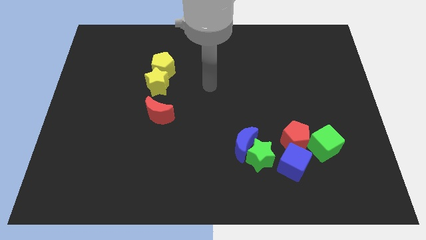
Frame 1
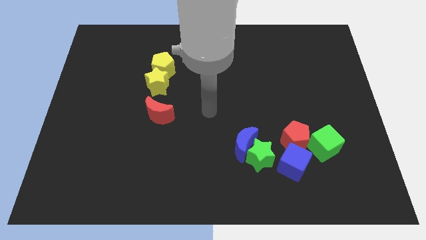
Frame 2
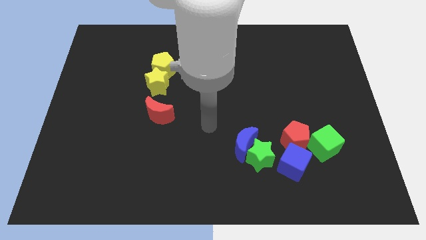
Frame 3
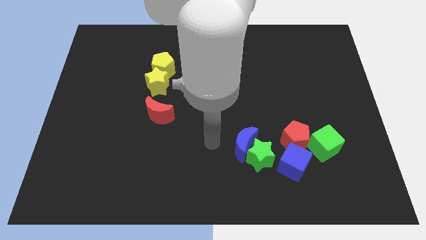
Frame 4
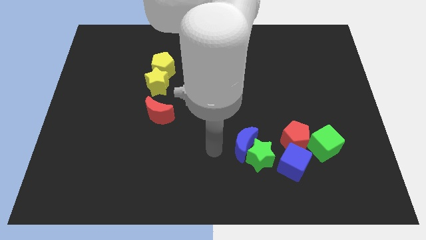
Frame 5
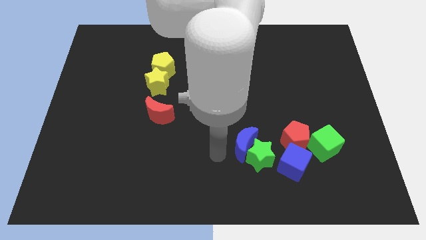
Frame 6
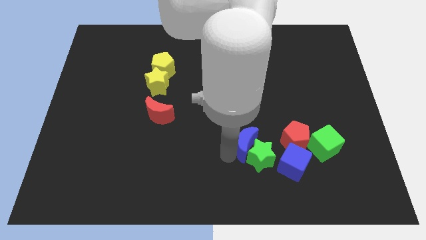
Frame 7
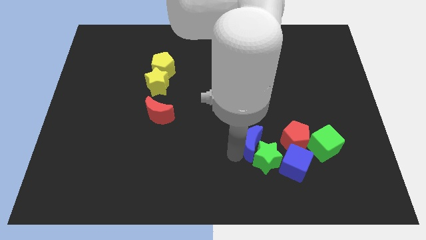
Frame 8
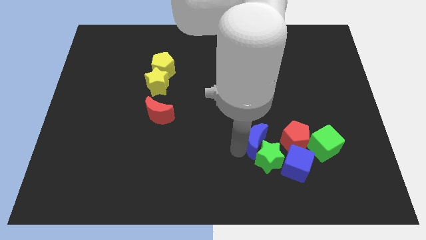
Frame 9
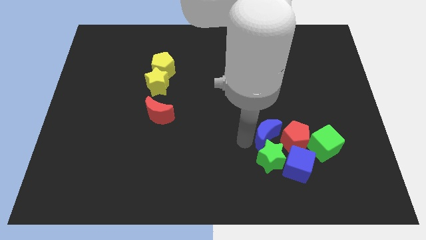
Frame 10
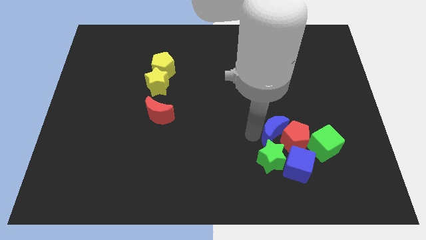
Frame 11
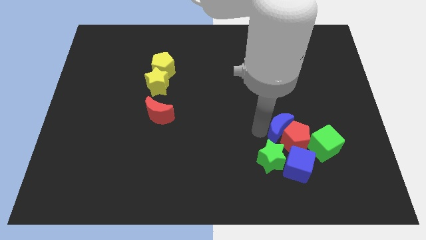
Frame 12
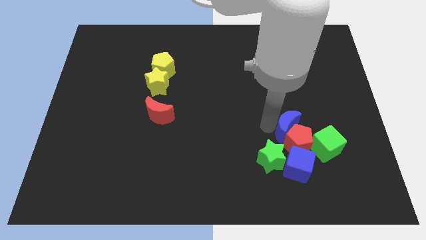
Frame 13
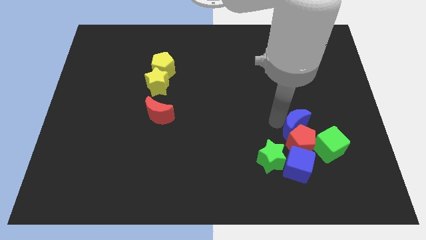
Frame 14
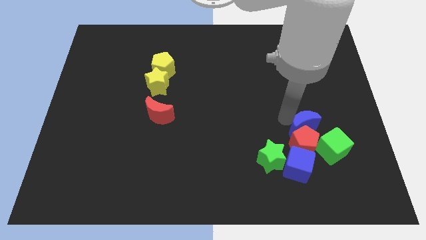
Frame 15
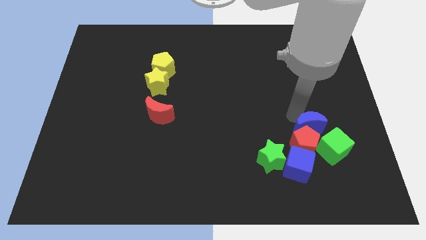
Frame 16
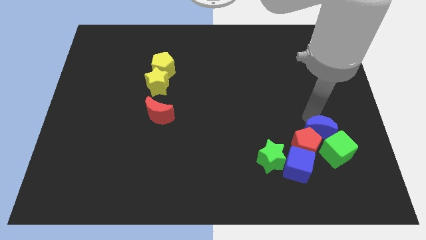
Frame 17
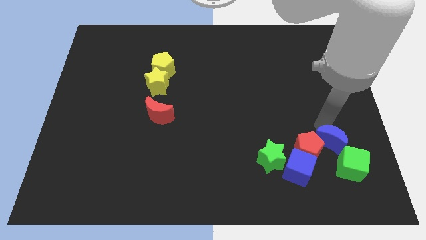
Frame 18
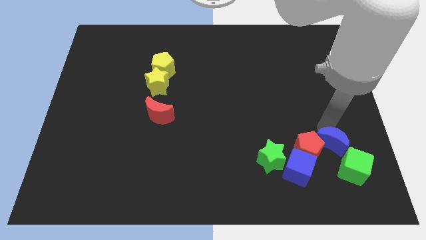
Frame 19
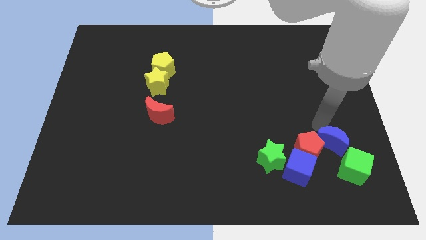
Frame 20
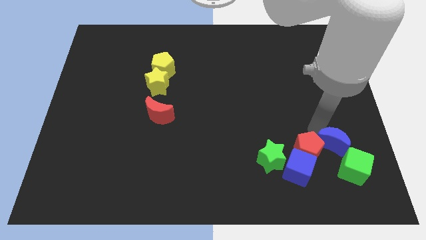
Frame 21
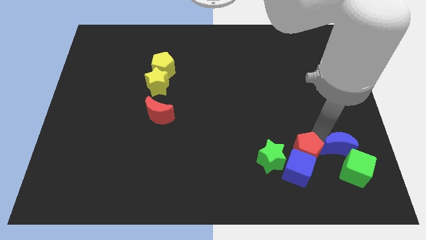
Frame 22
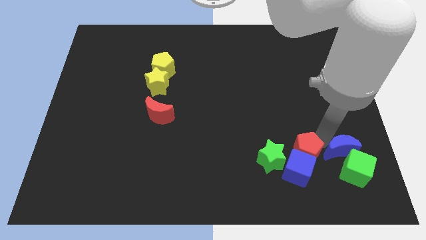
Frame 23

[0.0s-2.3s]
push the blue moon close to the green cube

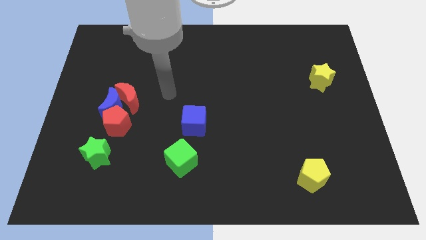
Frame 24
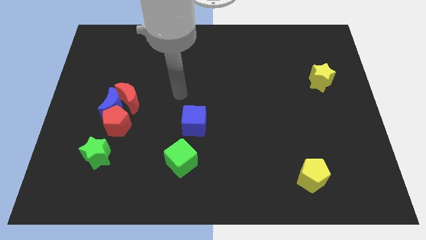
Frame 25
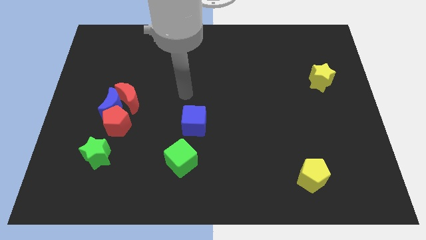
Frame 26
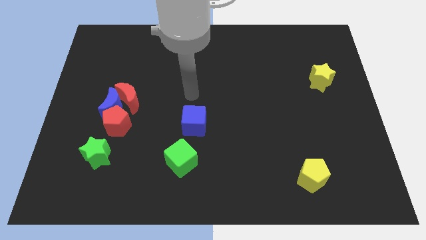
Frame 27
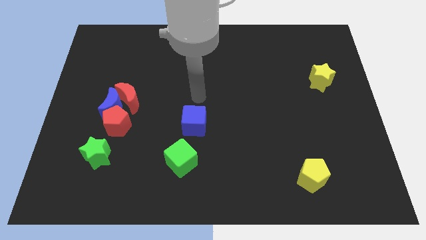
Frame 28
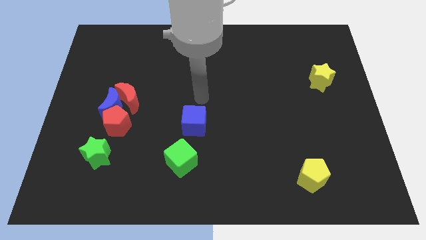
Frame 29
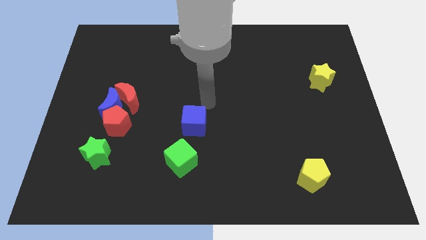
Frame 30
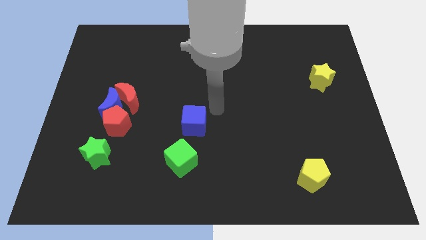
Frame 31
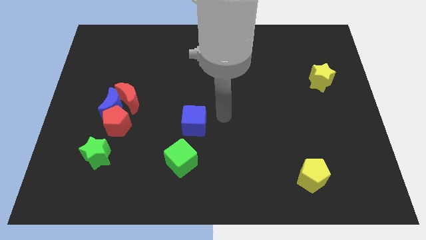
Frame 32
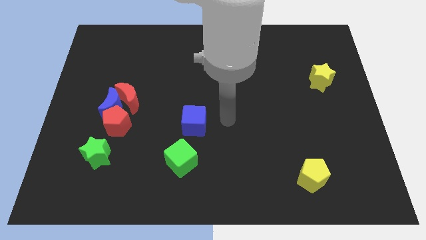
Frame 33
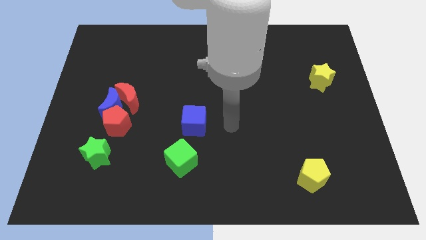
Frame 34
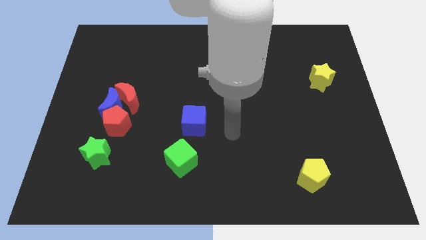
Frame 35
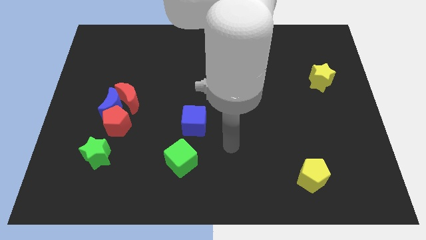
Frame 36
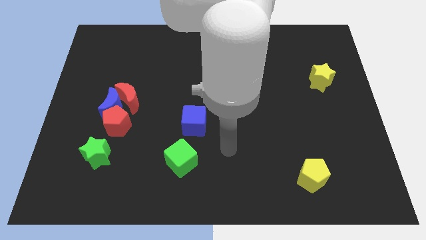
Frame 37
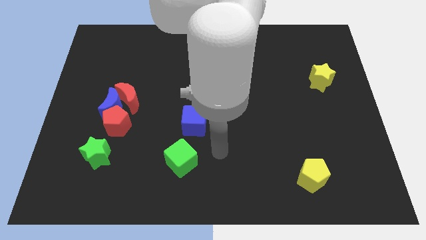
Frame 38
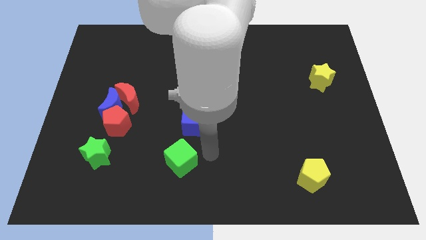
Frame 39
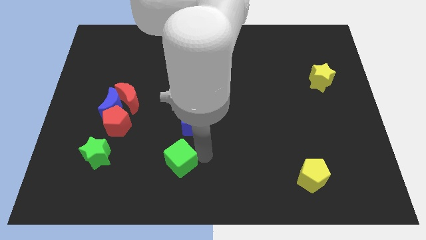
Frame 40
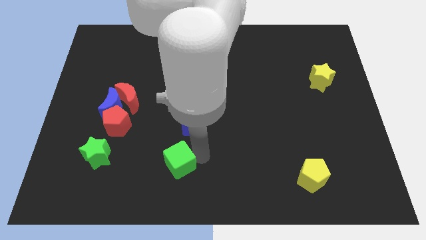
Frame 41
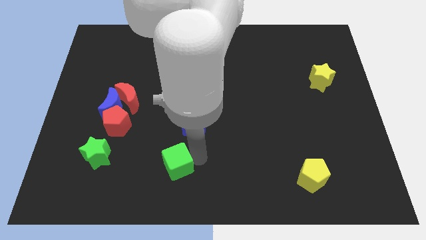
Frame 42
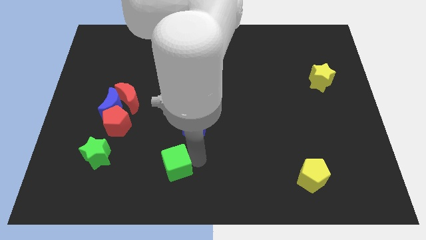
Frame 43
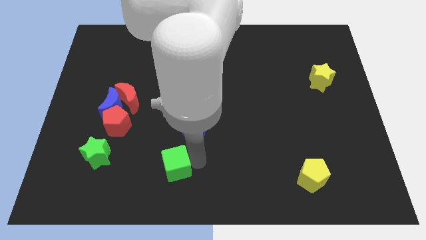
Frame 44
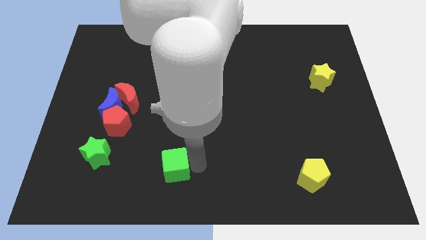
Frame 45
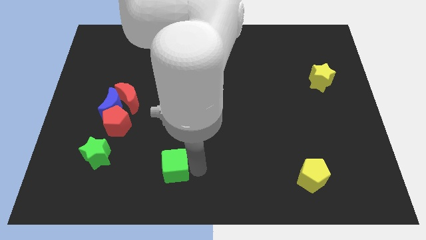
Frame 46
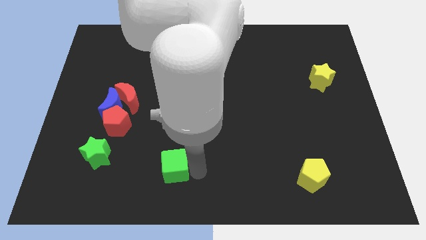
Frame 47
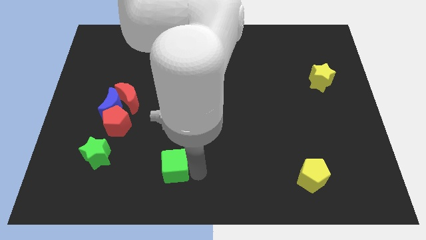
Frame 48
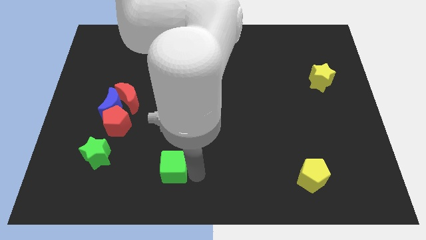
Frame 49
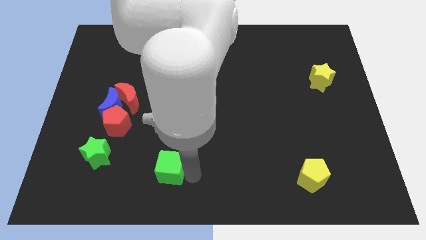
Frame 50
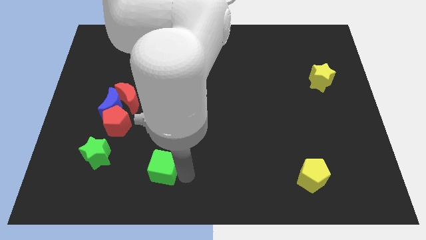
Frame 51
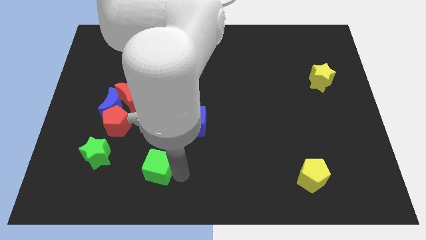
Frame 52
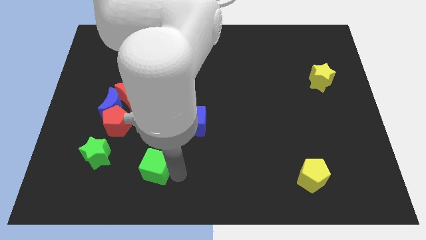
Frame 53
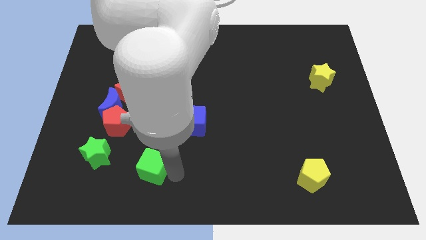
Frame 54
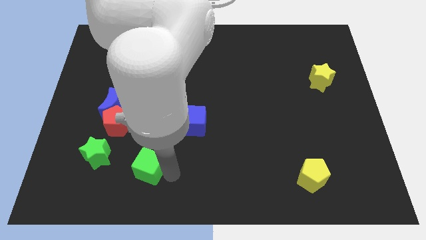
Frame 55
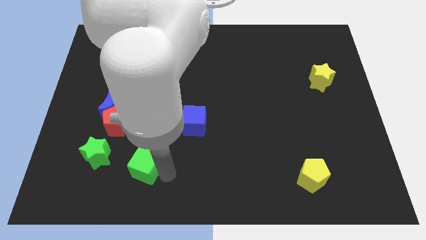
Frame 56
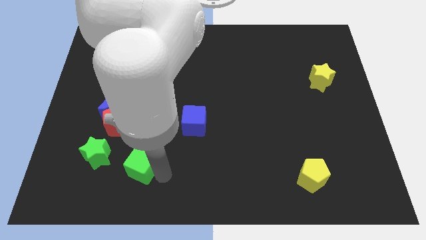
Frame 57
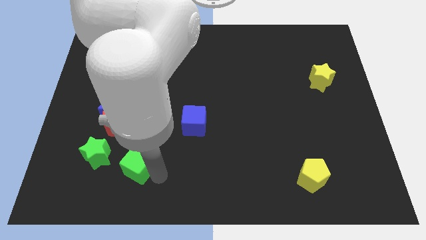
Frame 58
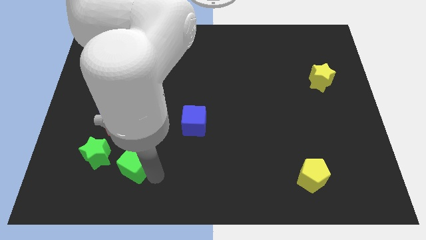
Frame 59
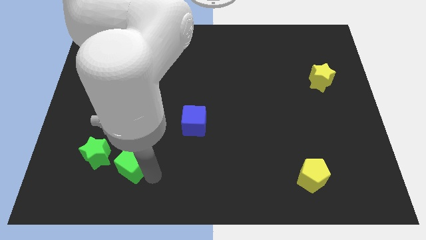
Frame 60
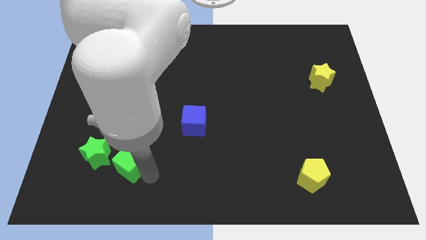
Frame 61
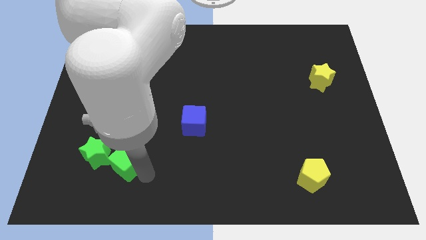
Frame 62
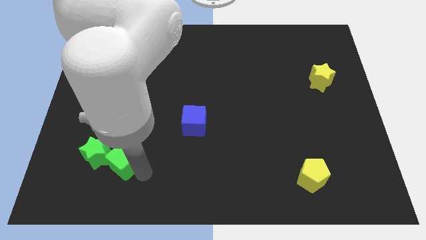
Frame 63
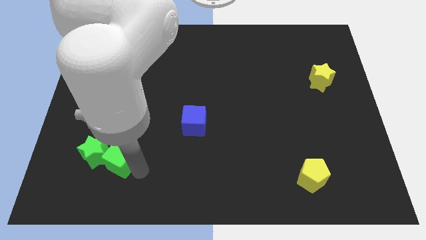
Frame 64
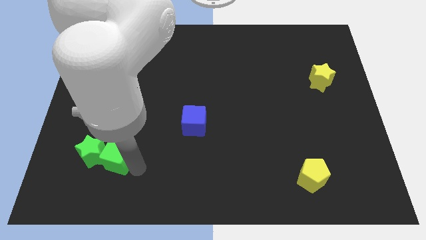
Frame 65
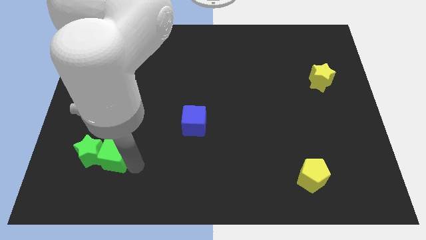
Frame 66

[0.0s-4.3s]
put the green cube next to the green star

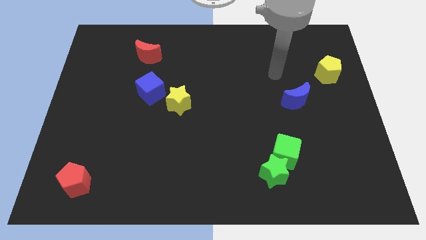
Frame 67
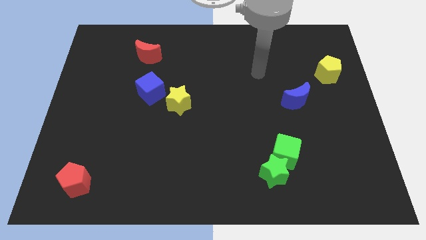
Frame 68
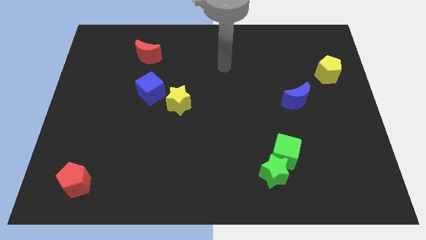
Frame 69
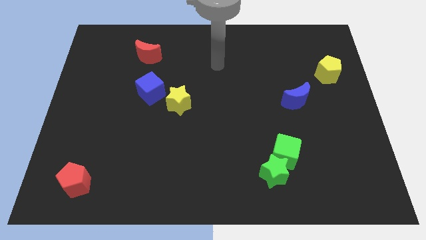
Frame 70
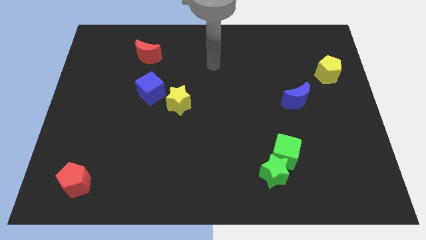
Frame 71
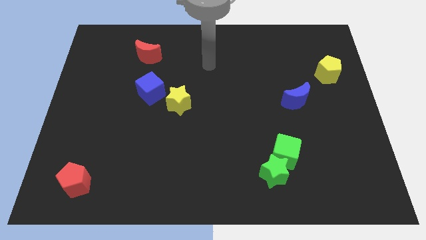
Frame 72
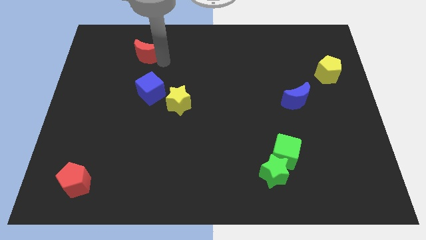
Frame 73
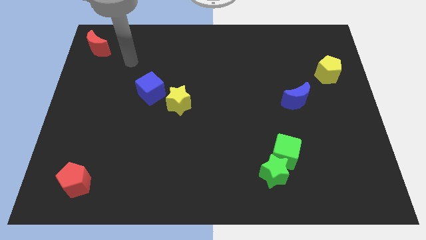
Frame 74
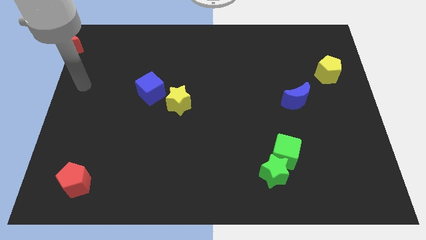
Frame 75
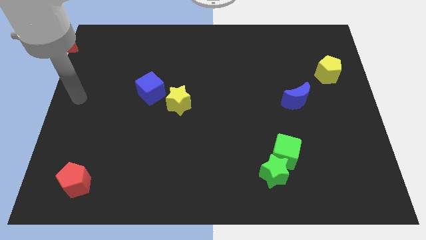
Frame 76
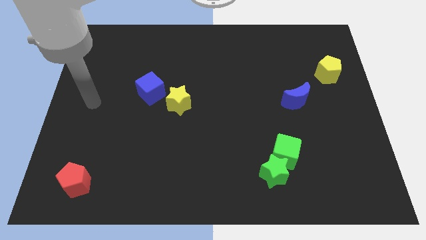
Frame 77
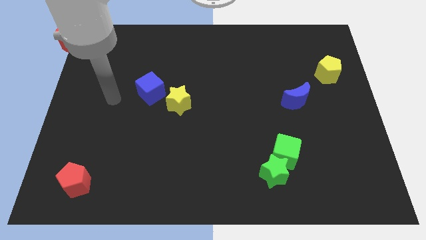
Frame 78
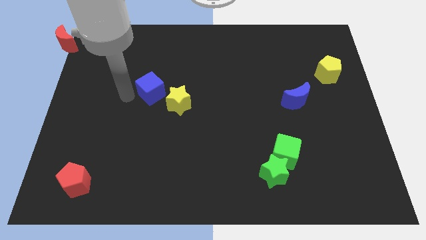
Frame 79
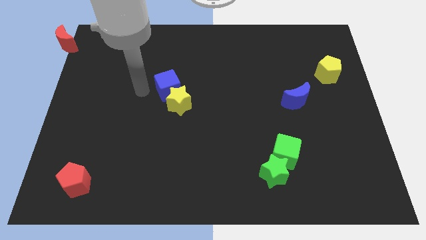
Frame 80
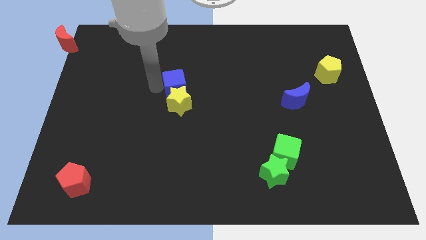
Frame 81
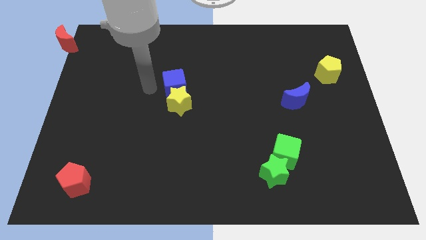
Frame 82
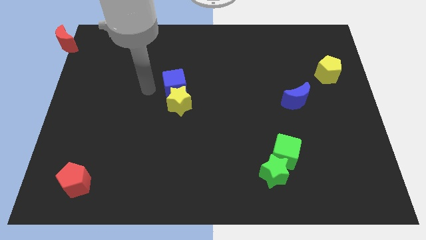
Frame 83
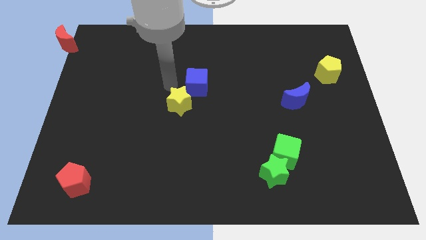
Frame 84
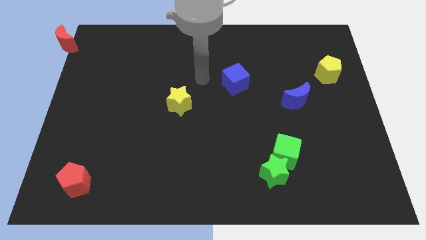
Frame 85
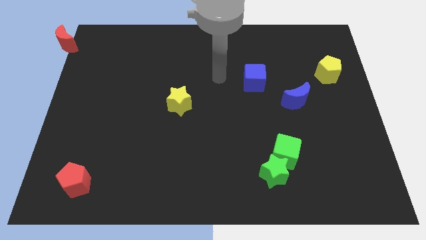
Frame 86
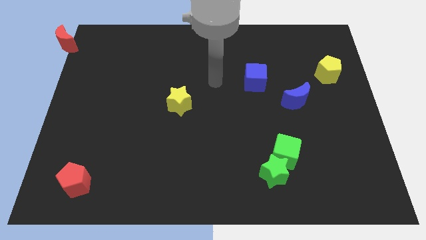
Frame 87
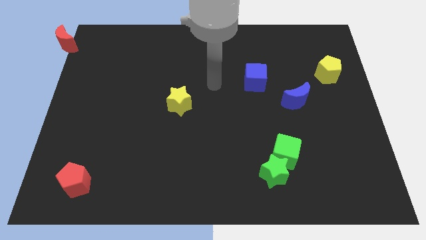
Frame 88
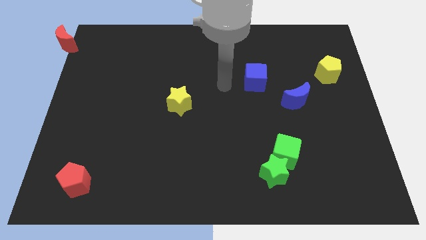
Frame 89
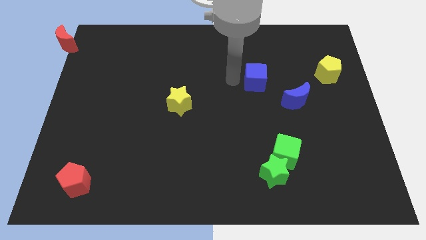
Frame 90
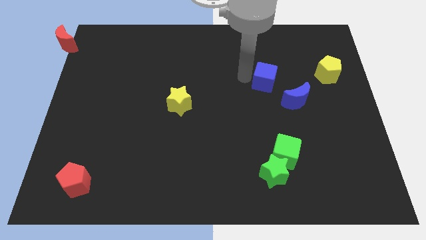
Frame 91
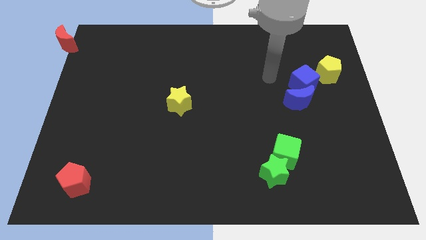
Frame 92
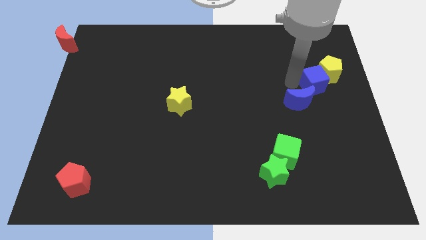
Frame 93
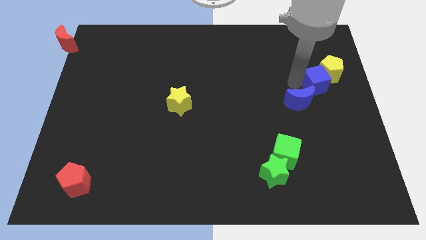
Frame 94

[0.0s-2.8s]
put the blue cube close to the yellow pentagon
